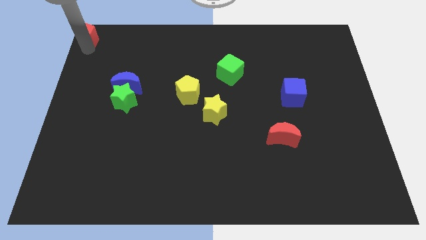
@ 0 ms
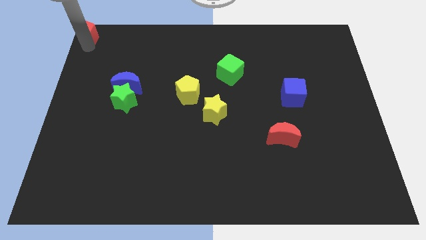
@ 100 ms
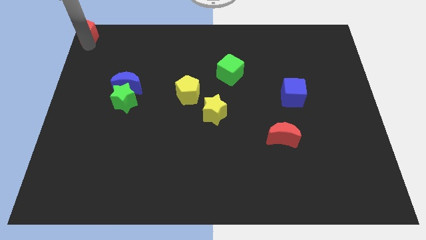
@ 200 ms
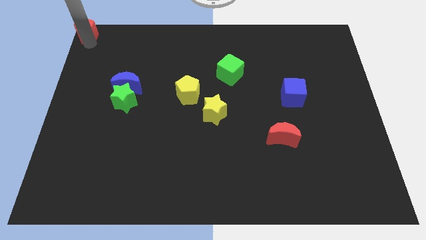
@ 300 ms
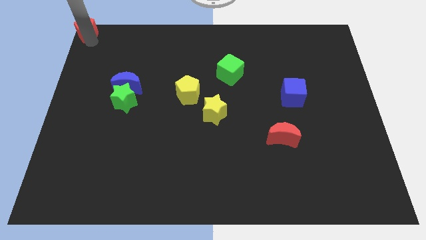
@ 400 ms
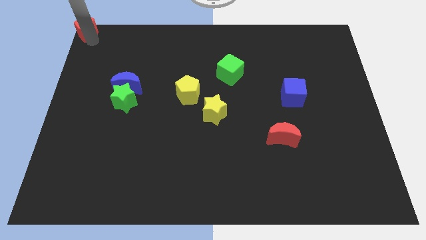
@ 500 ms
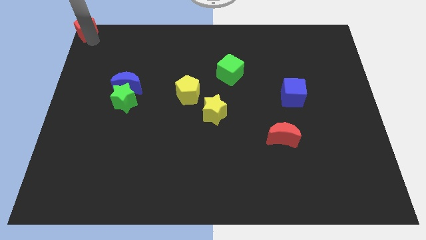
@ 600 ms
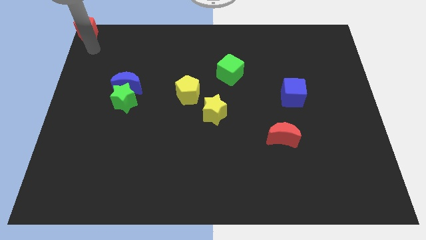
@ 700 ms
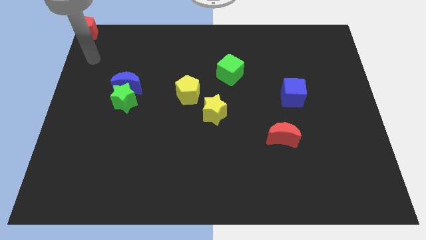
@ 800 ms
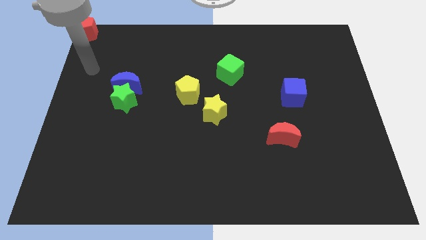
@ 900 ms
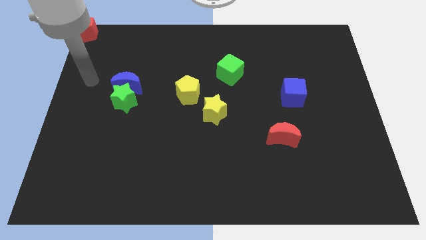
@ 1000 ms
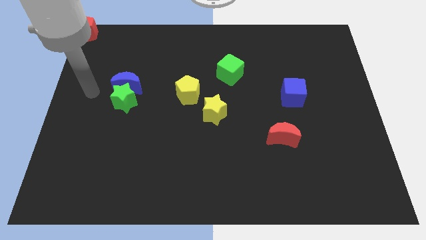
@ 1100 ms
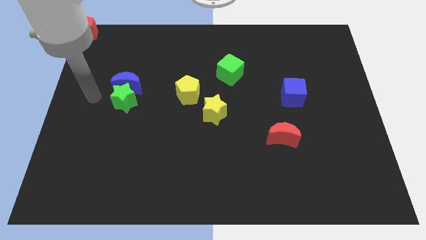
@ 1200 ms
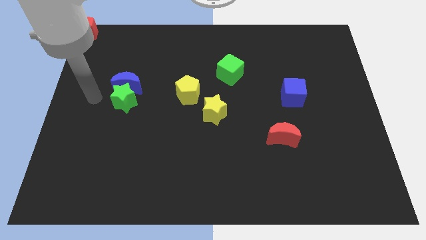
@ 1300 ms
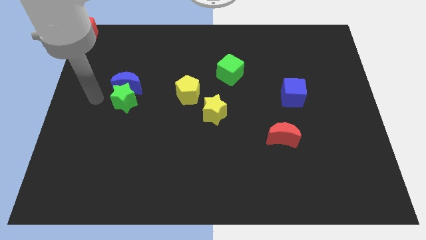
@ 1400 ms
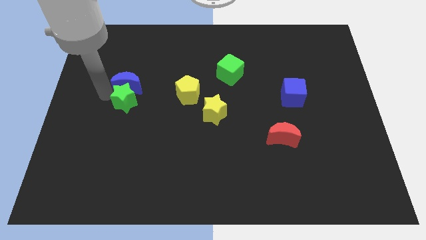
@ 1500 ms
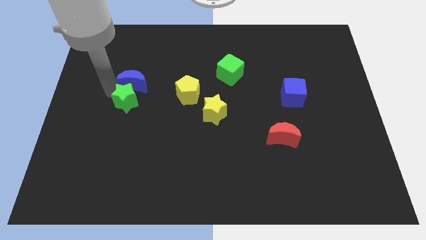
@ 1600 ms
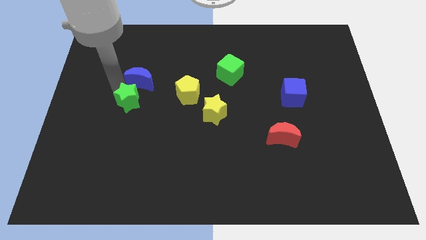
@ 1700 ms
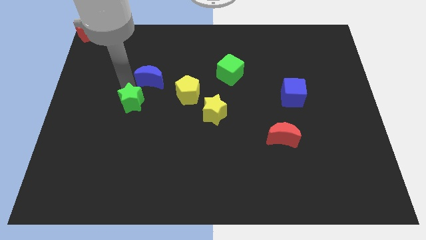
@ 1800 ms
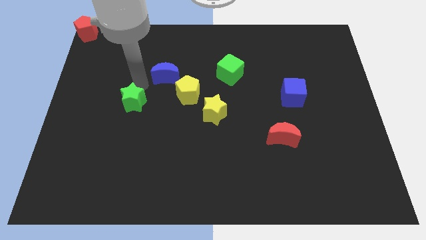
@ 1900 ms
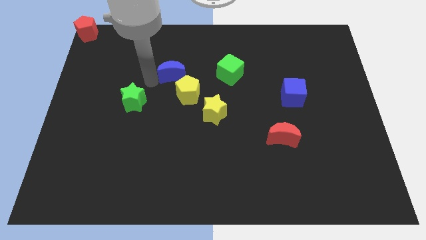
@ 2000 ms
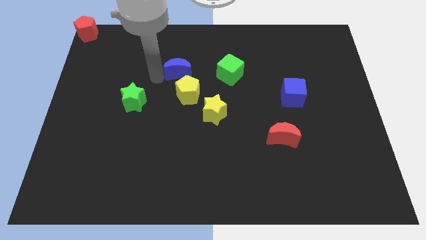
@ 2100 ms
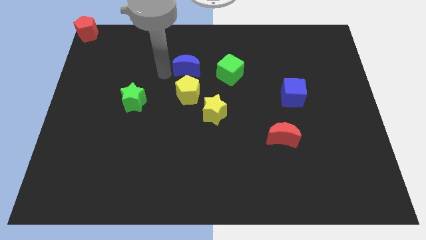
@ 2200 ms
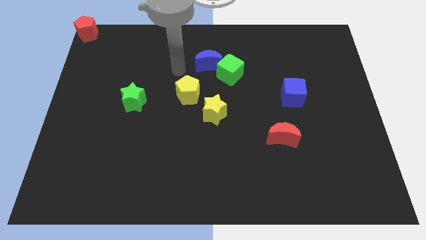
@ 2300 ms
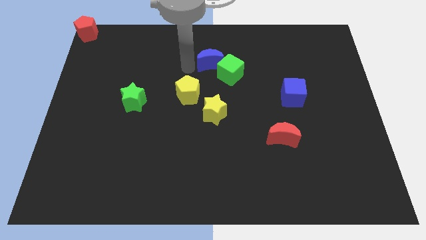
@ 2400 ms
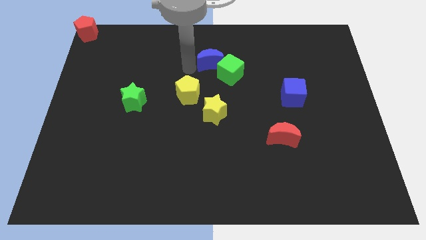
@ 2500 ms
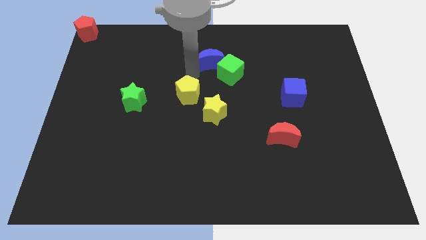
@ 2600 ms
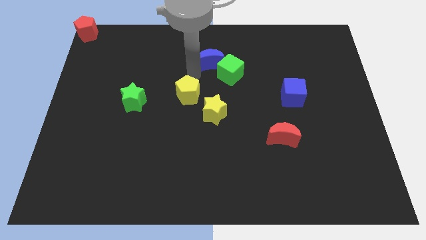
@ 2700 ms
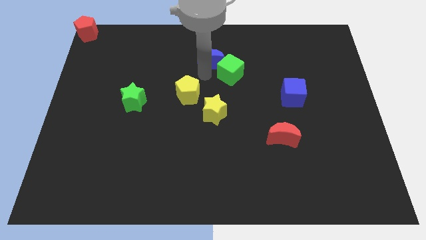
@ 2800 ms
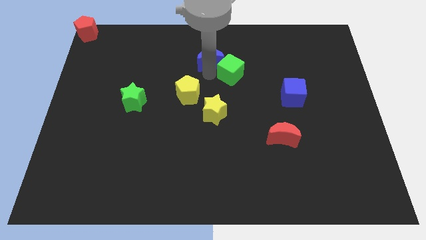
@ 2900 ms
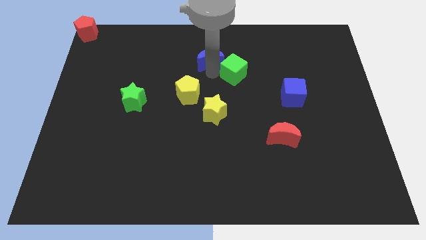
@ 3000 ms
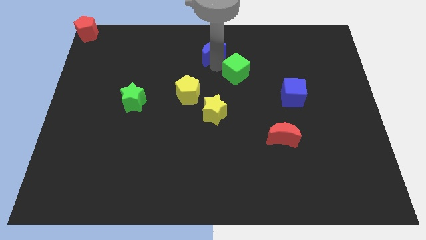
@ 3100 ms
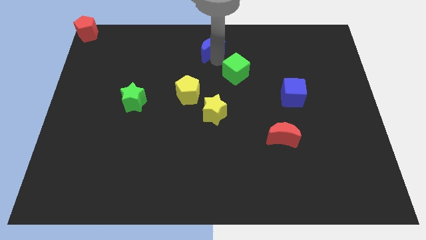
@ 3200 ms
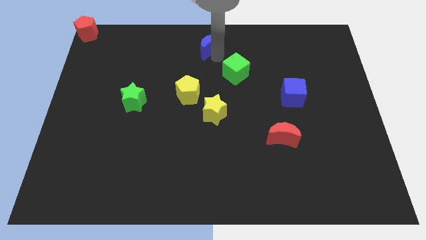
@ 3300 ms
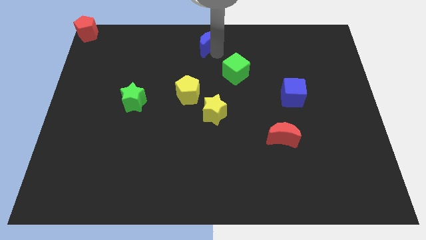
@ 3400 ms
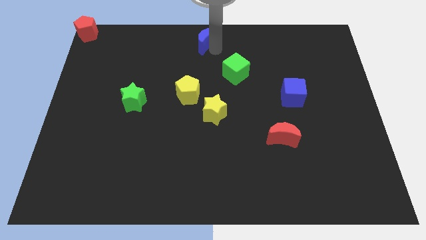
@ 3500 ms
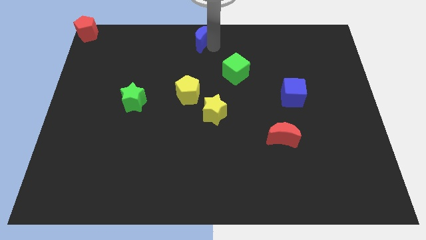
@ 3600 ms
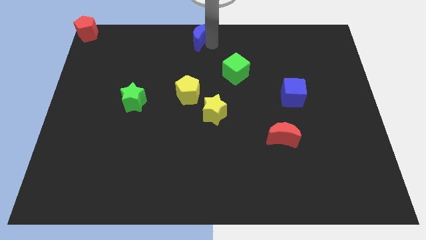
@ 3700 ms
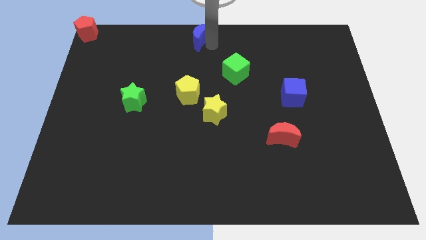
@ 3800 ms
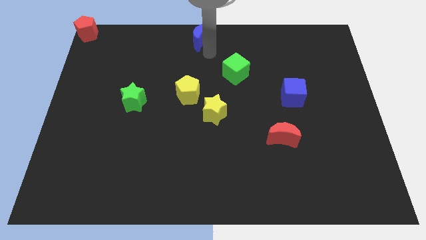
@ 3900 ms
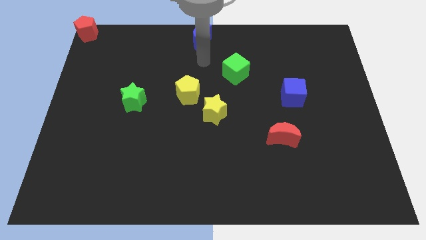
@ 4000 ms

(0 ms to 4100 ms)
place the blue crescent vertically above the yellow pentagon

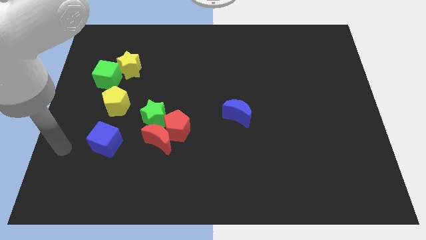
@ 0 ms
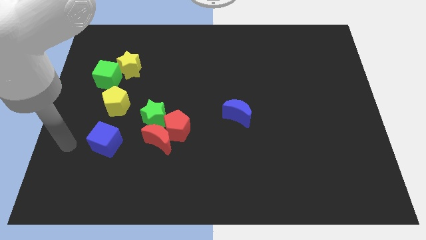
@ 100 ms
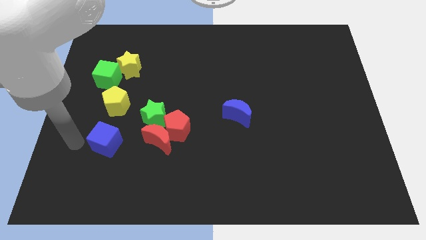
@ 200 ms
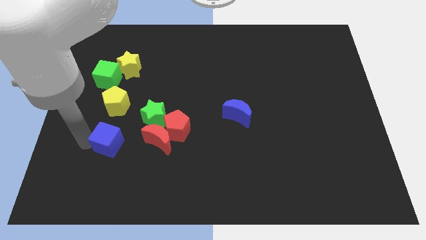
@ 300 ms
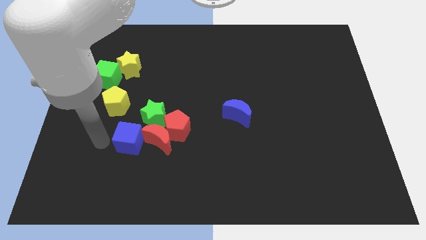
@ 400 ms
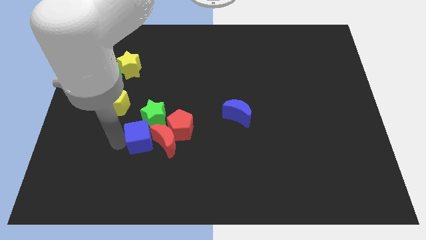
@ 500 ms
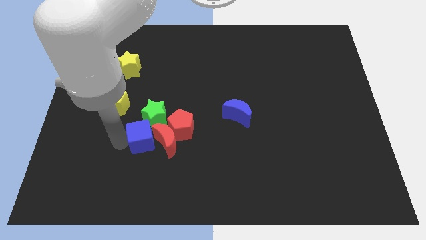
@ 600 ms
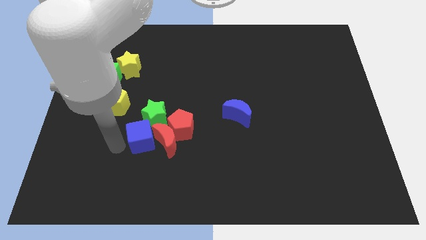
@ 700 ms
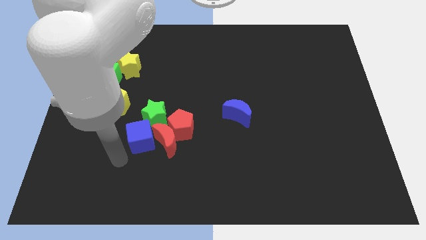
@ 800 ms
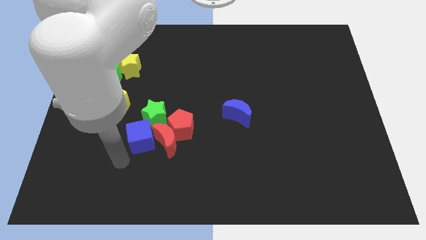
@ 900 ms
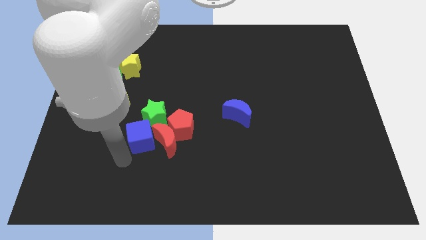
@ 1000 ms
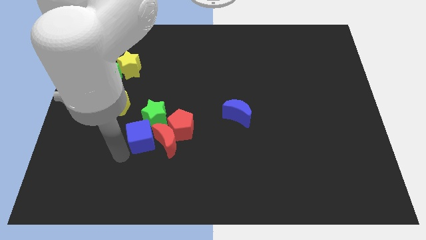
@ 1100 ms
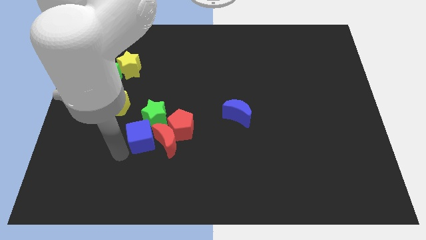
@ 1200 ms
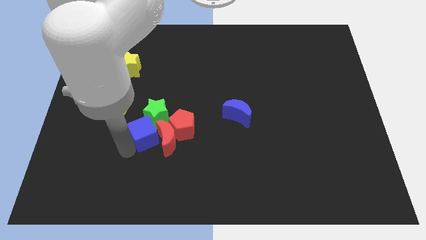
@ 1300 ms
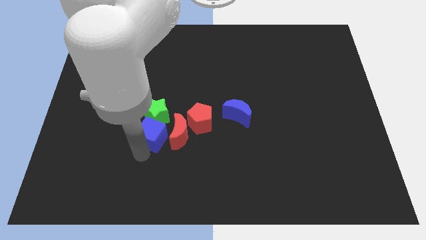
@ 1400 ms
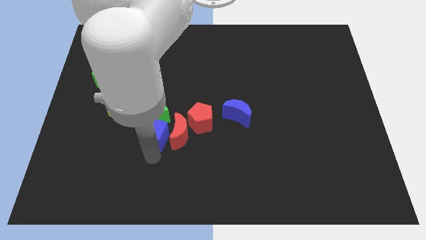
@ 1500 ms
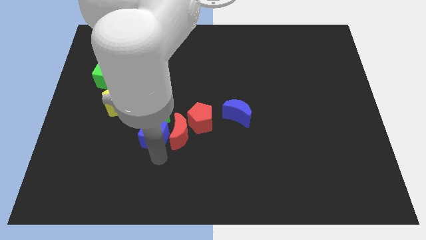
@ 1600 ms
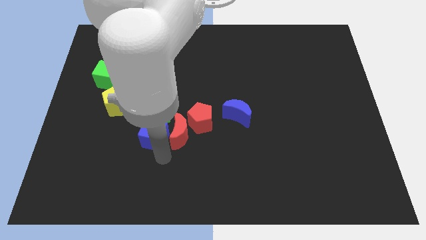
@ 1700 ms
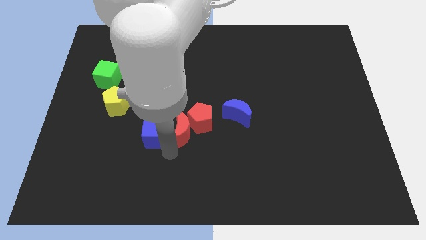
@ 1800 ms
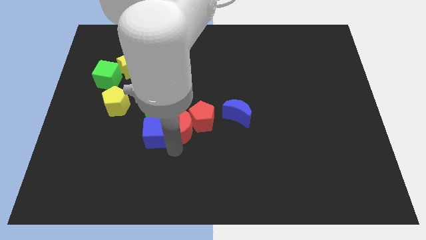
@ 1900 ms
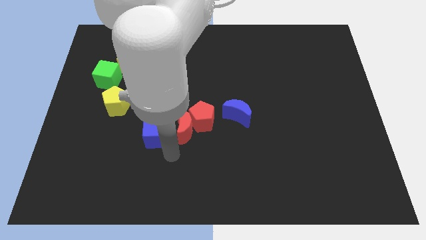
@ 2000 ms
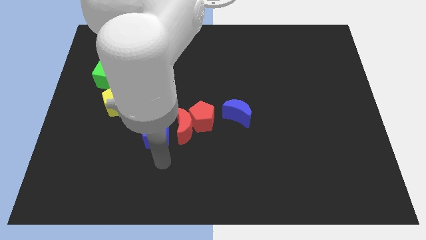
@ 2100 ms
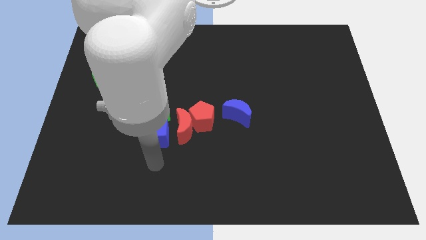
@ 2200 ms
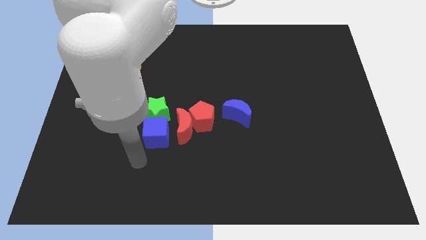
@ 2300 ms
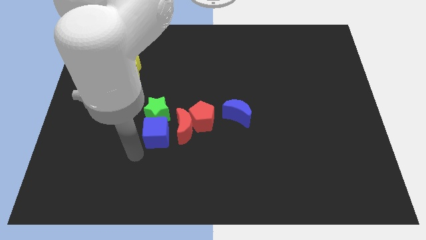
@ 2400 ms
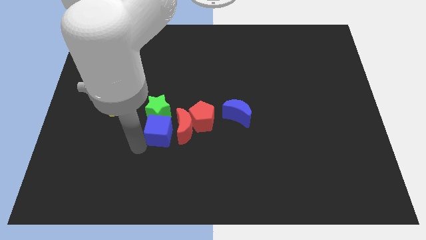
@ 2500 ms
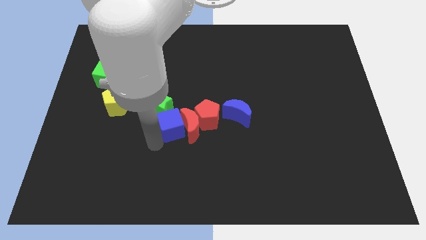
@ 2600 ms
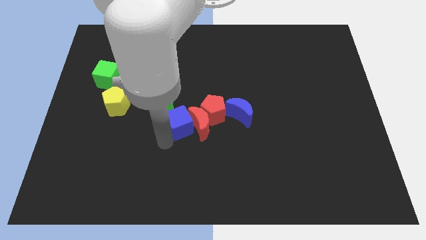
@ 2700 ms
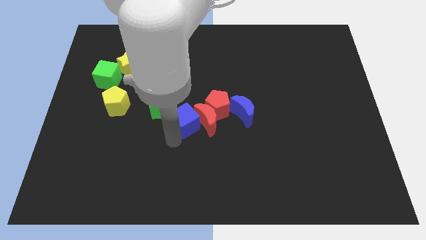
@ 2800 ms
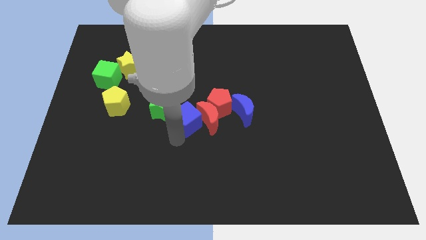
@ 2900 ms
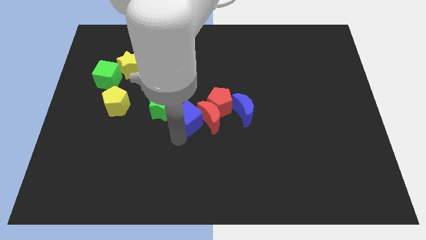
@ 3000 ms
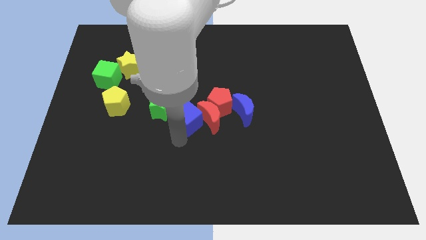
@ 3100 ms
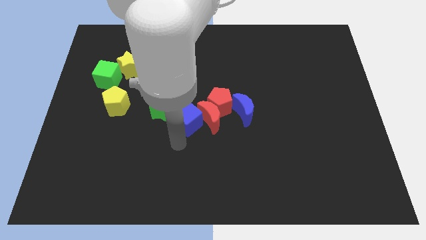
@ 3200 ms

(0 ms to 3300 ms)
push the blue cube into the red moon

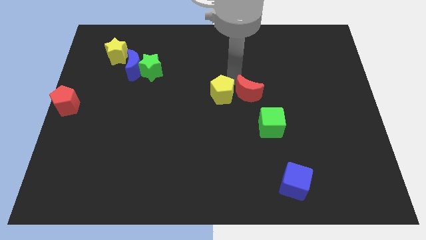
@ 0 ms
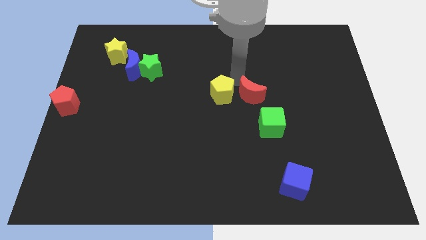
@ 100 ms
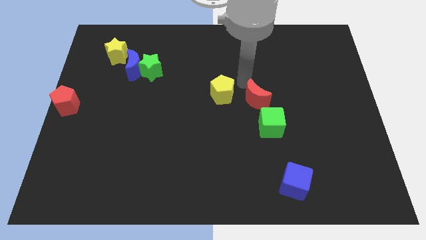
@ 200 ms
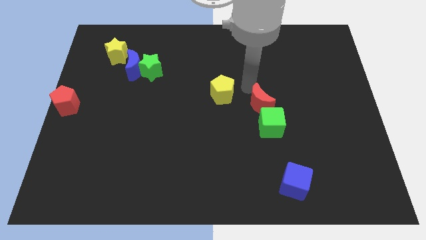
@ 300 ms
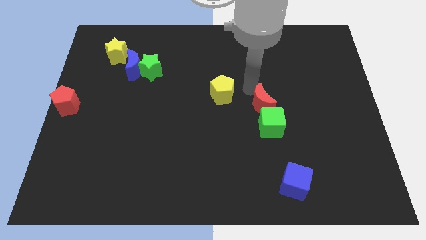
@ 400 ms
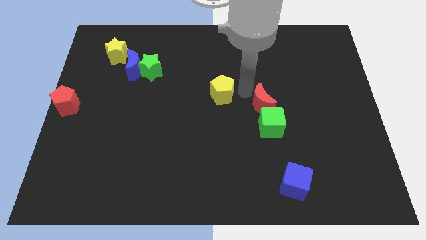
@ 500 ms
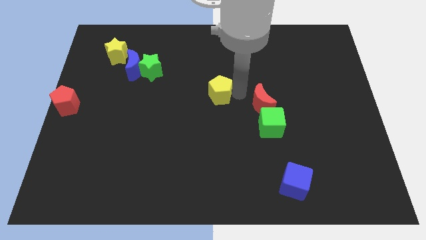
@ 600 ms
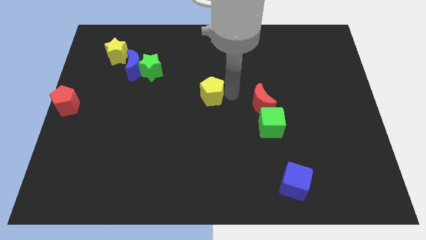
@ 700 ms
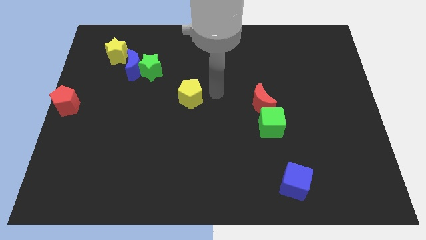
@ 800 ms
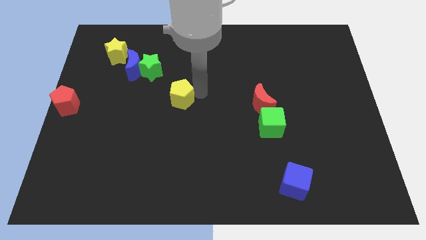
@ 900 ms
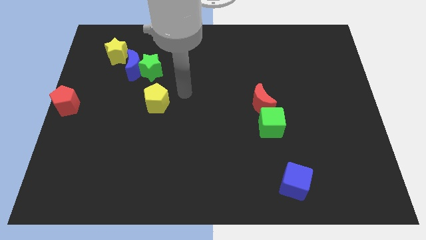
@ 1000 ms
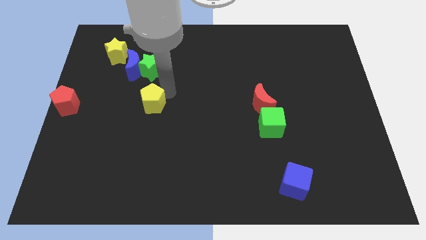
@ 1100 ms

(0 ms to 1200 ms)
push the yellow pentagon underneath the green star

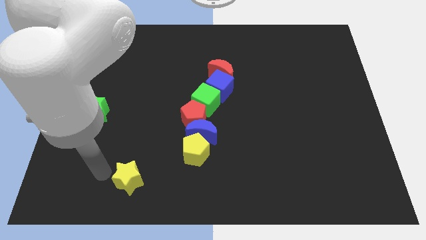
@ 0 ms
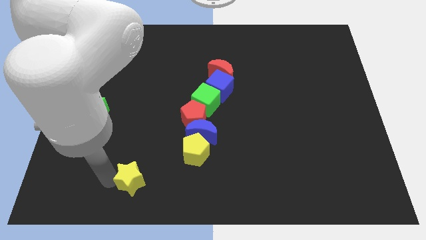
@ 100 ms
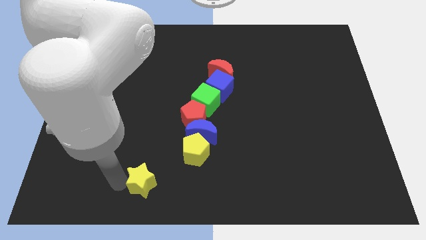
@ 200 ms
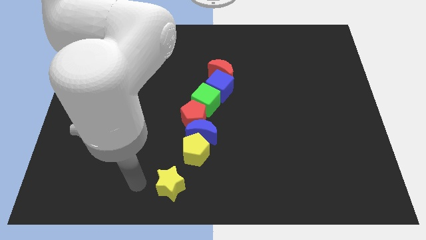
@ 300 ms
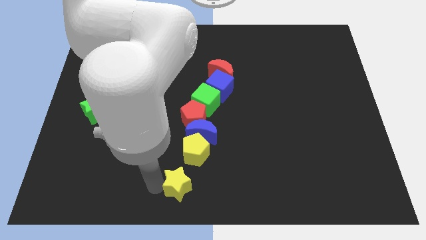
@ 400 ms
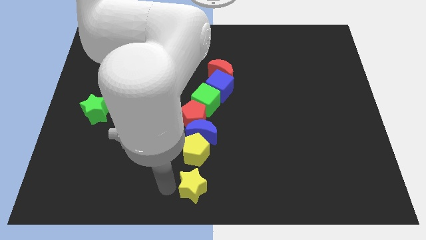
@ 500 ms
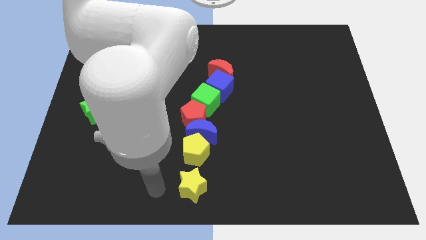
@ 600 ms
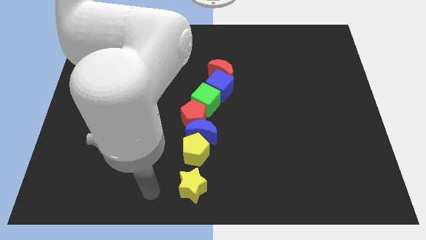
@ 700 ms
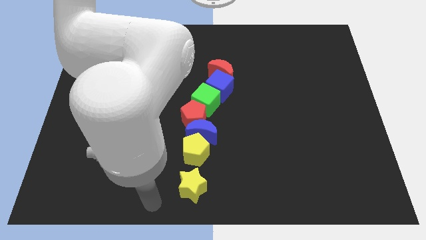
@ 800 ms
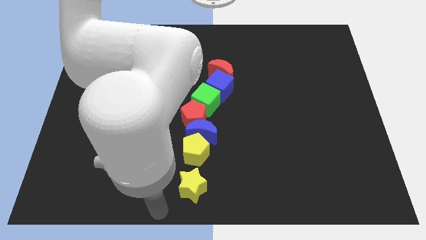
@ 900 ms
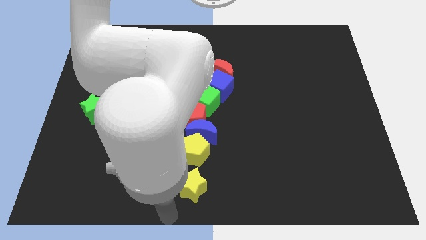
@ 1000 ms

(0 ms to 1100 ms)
move the yellow star to the bottom of the yellow pentagon
